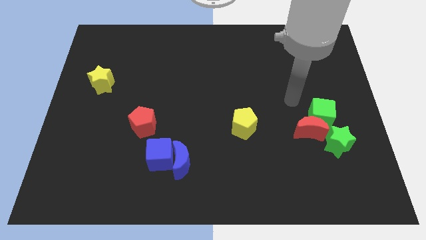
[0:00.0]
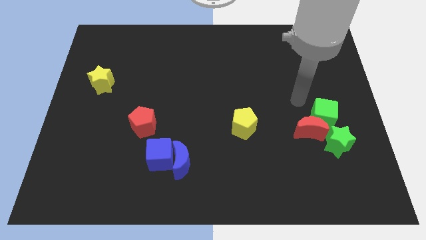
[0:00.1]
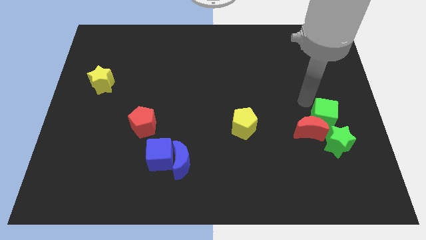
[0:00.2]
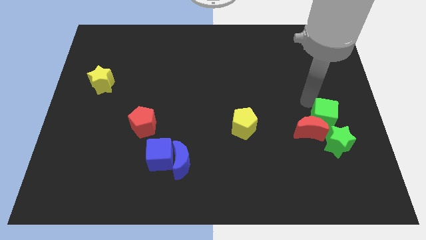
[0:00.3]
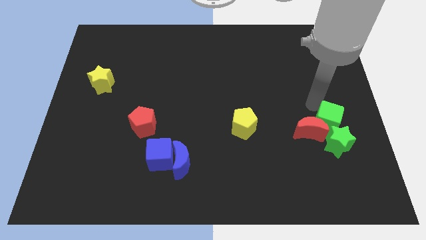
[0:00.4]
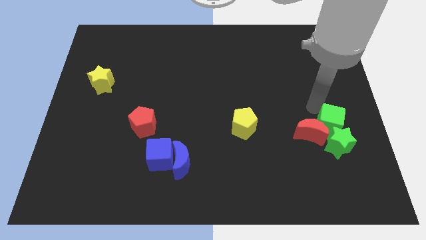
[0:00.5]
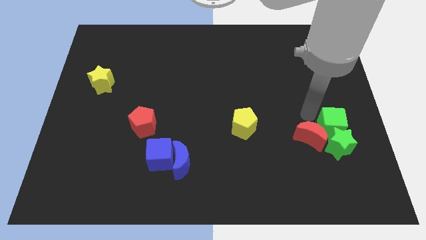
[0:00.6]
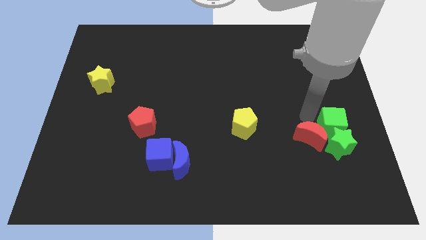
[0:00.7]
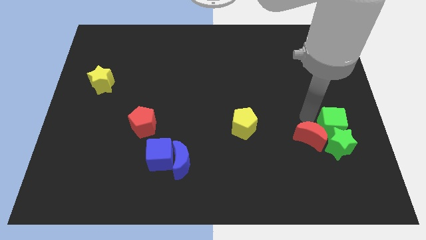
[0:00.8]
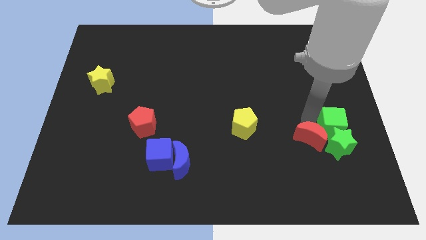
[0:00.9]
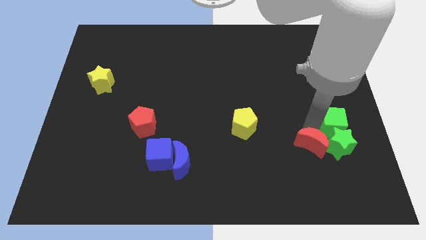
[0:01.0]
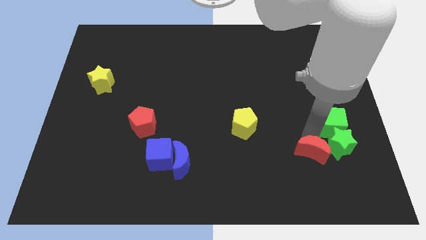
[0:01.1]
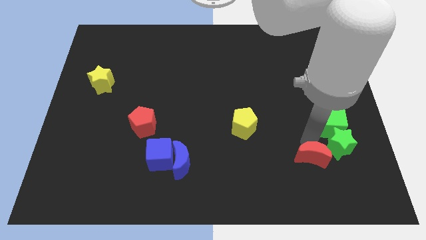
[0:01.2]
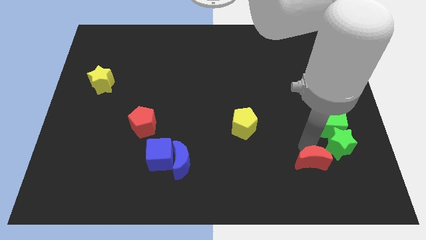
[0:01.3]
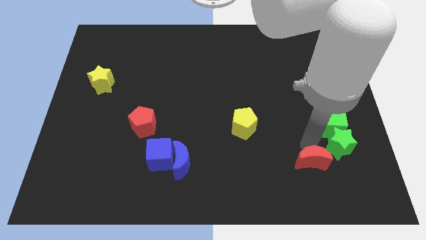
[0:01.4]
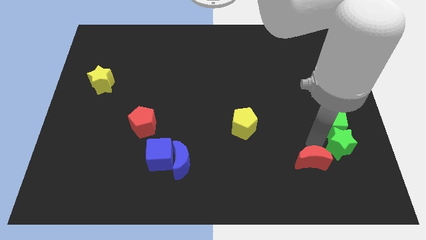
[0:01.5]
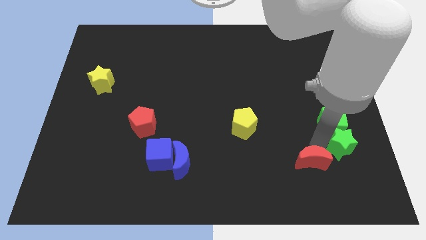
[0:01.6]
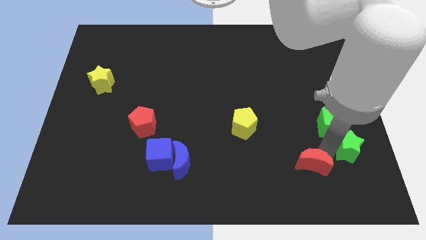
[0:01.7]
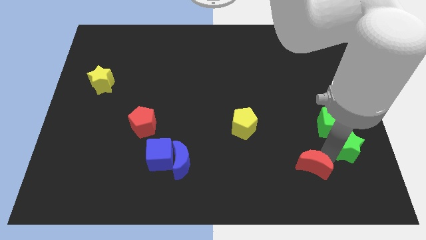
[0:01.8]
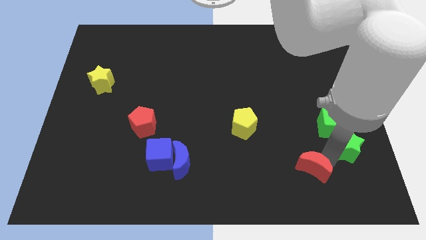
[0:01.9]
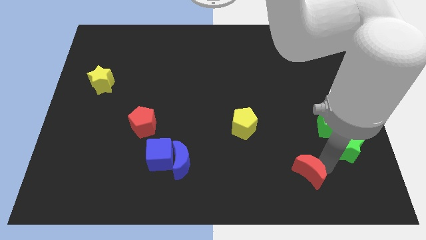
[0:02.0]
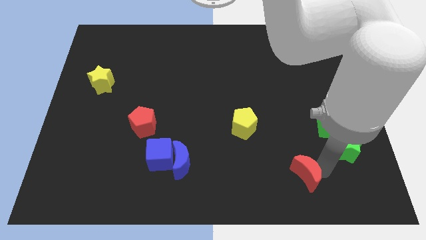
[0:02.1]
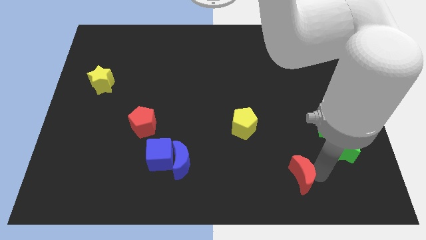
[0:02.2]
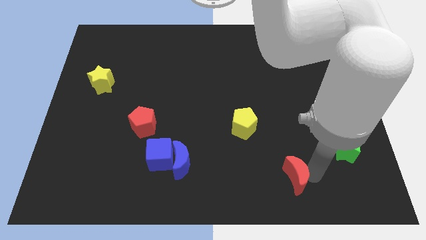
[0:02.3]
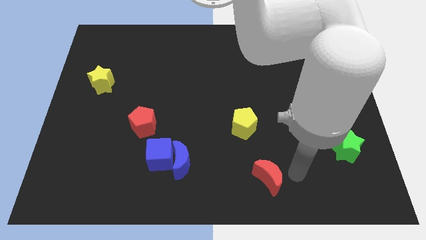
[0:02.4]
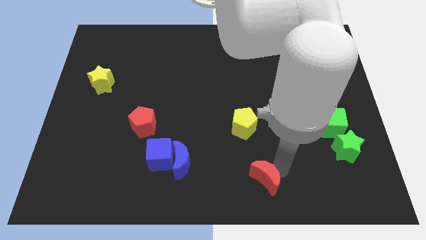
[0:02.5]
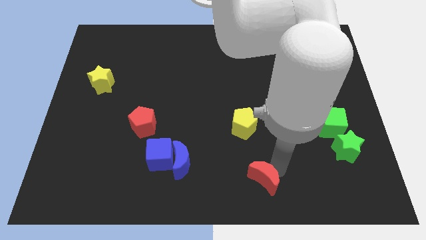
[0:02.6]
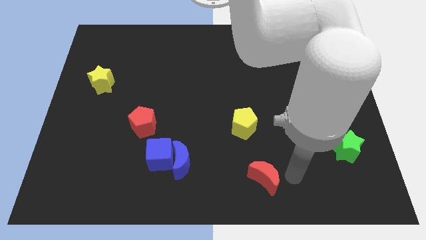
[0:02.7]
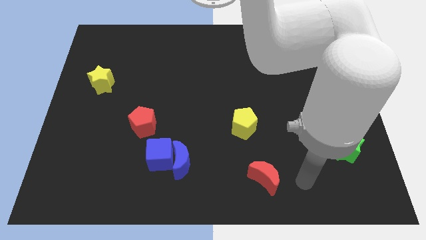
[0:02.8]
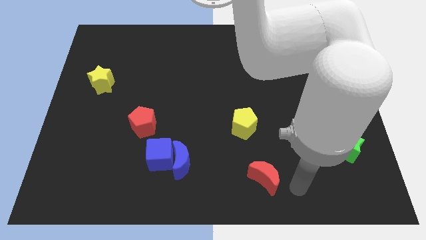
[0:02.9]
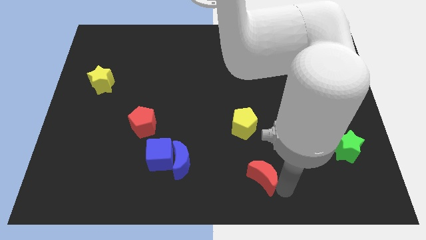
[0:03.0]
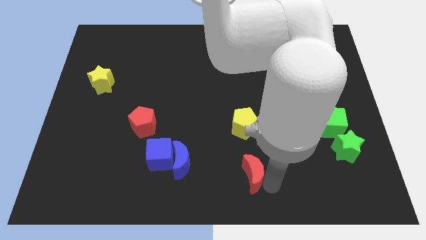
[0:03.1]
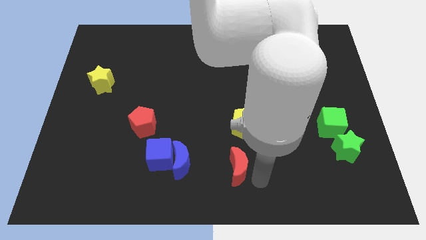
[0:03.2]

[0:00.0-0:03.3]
place the red crescent below the yellow pentagon

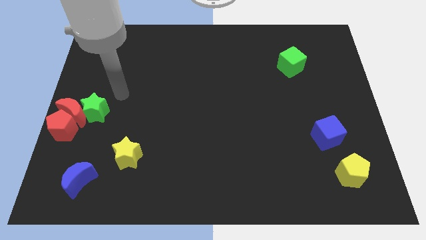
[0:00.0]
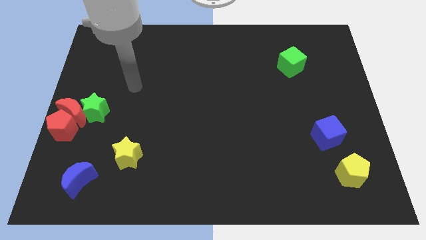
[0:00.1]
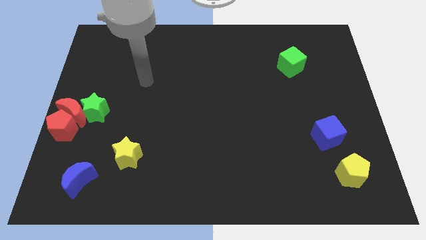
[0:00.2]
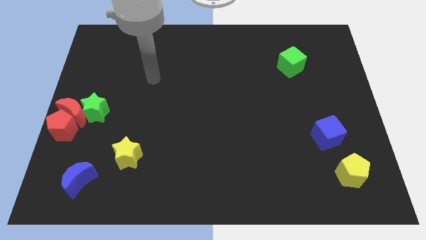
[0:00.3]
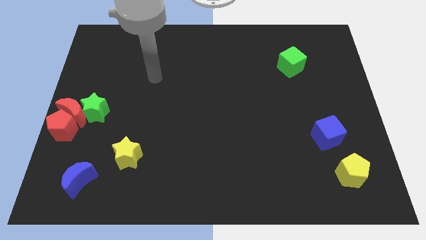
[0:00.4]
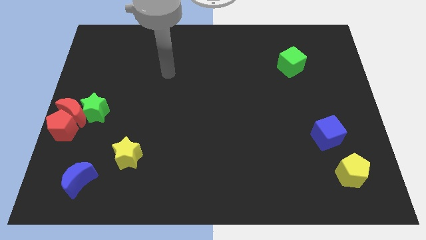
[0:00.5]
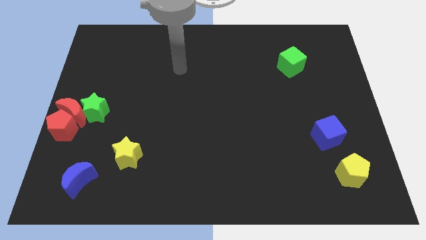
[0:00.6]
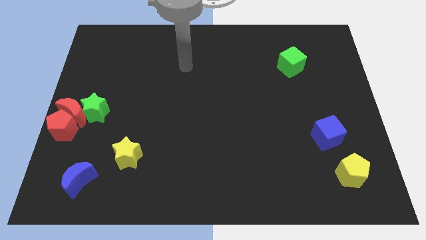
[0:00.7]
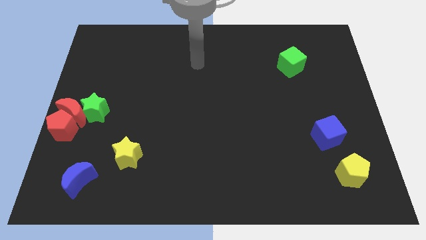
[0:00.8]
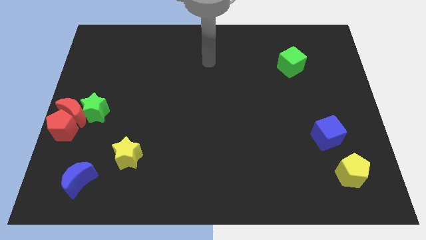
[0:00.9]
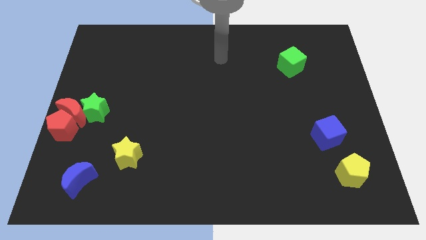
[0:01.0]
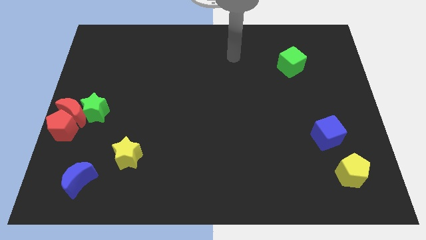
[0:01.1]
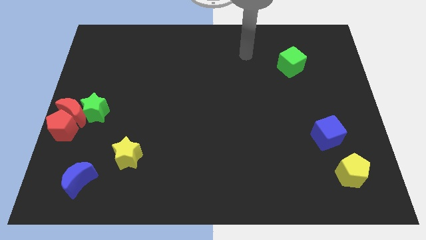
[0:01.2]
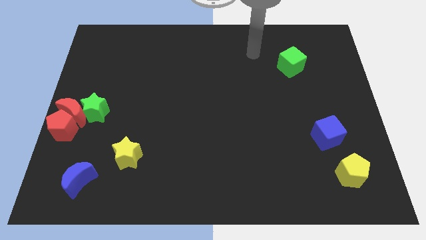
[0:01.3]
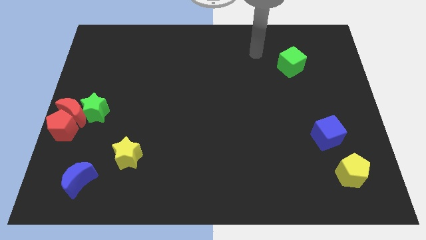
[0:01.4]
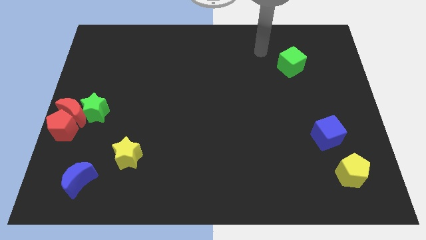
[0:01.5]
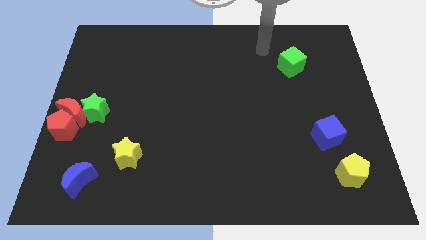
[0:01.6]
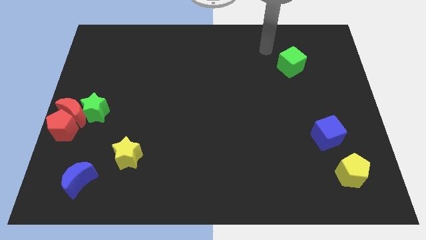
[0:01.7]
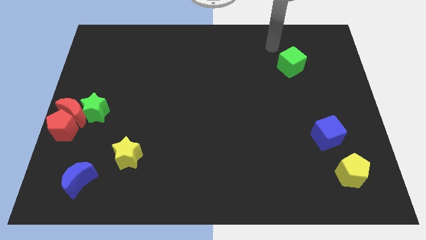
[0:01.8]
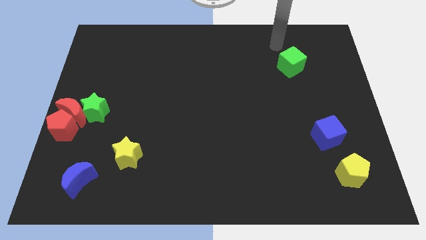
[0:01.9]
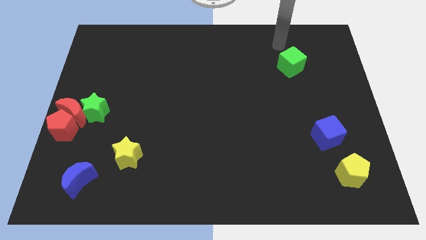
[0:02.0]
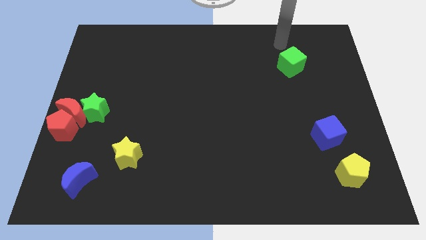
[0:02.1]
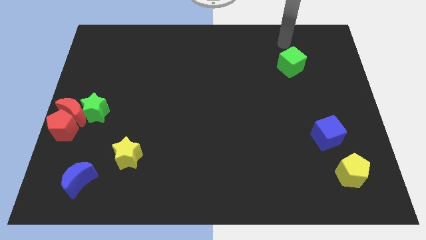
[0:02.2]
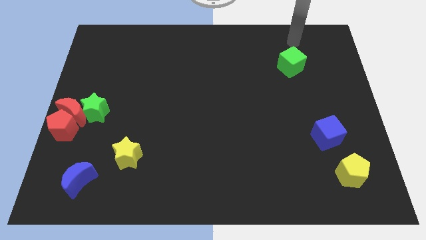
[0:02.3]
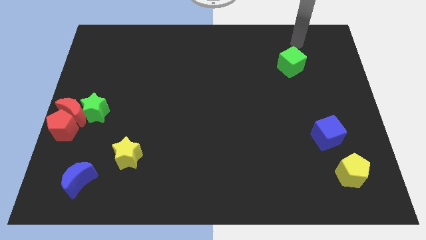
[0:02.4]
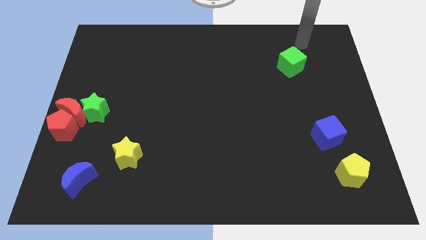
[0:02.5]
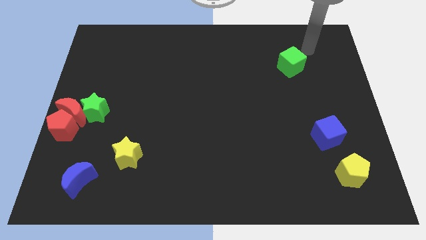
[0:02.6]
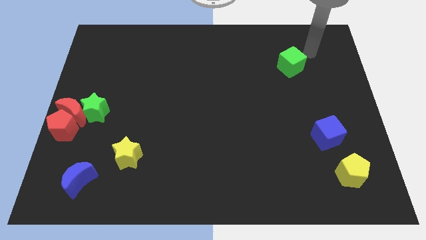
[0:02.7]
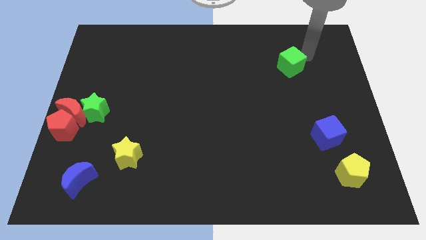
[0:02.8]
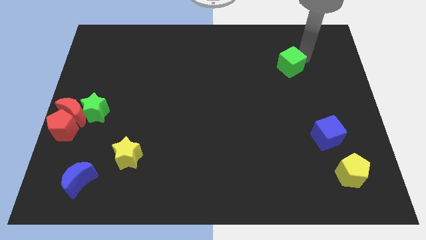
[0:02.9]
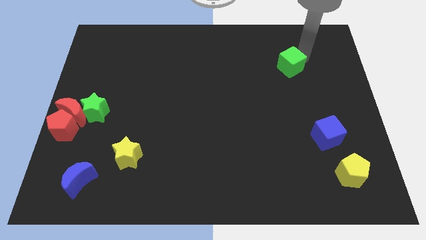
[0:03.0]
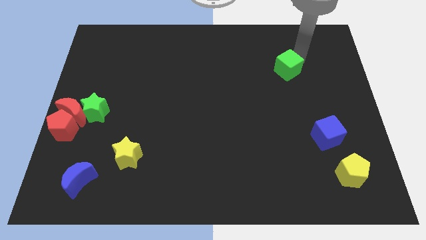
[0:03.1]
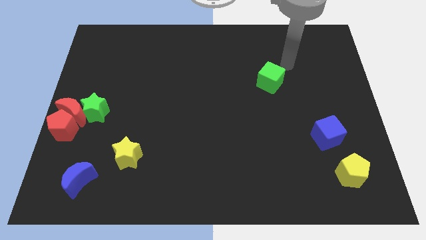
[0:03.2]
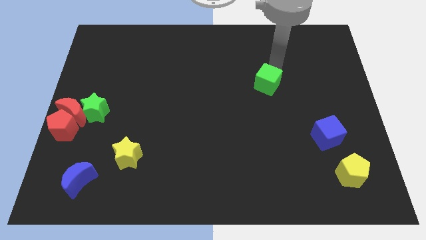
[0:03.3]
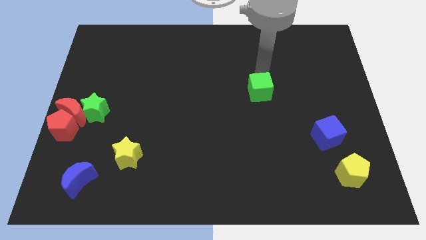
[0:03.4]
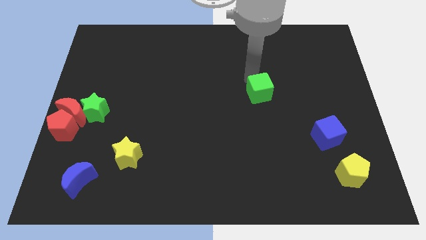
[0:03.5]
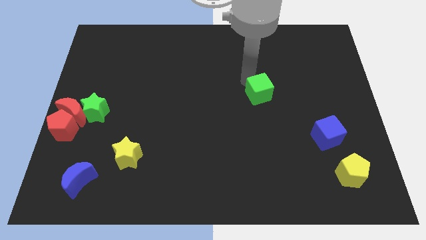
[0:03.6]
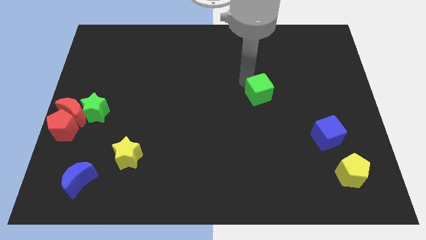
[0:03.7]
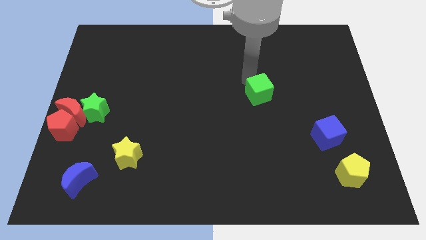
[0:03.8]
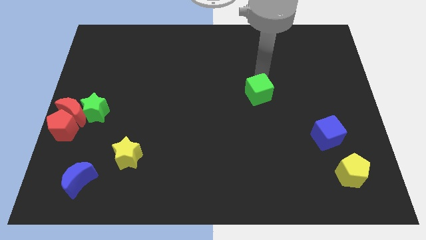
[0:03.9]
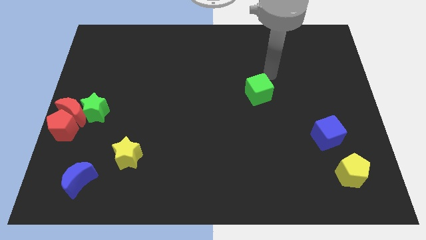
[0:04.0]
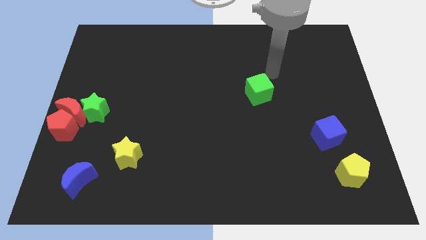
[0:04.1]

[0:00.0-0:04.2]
slide the green cube towards the center

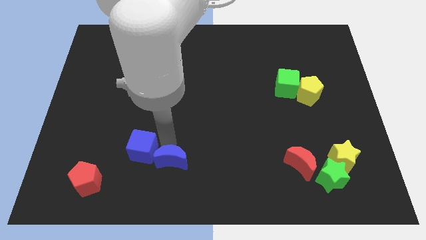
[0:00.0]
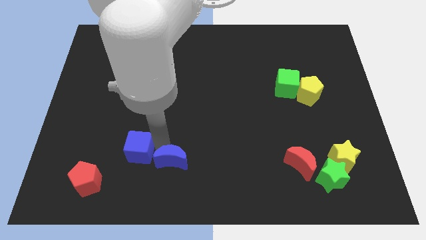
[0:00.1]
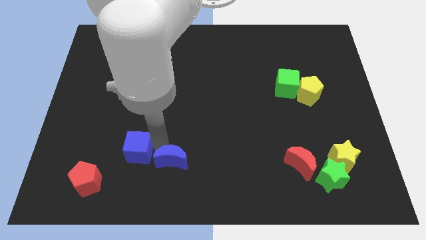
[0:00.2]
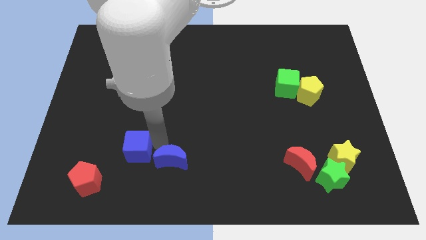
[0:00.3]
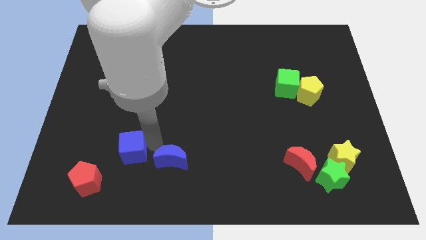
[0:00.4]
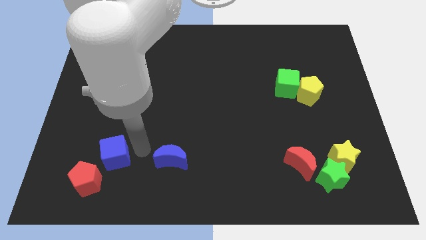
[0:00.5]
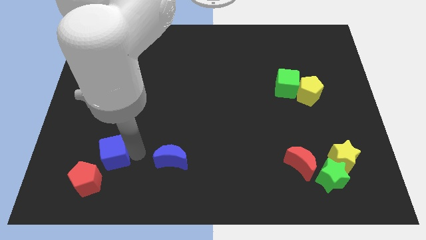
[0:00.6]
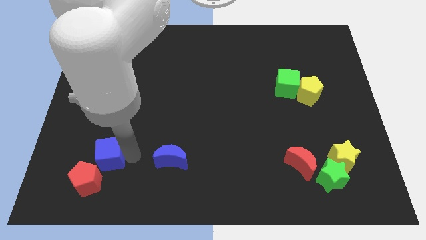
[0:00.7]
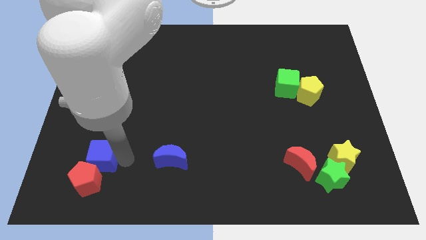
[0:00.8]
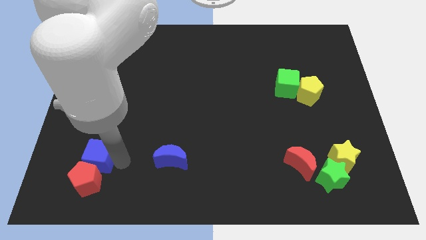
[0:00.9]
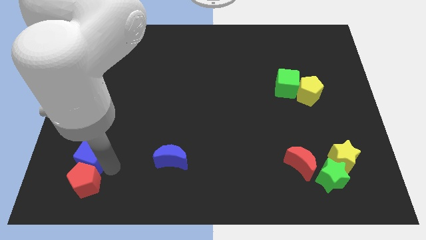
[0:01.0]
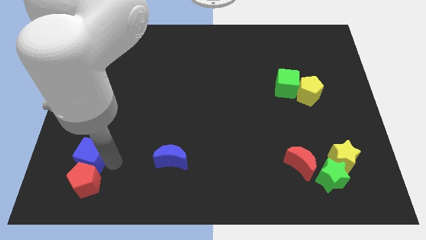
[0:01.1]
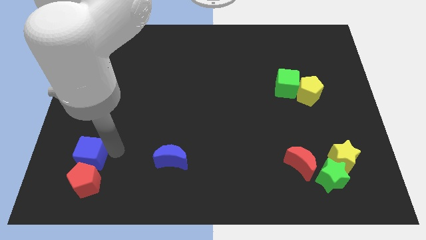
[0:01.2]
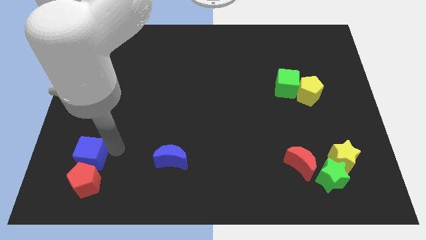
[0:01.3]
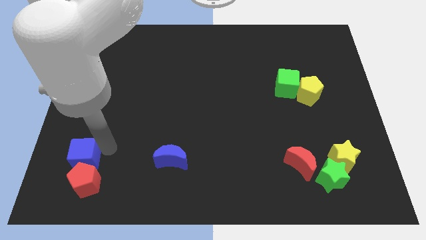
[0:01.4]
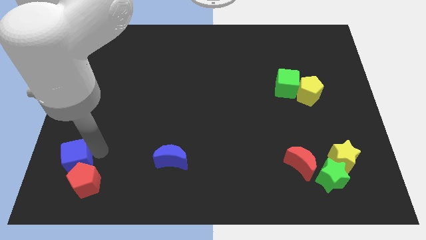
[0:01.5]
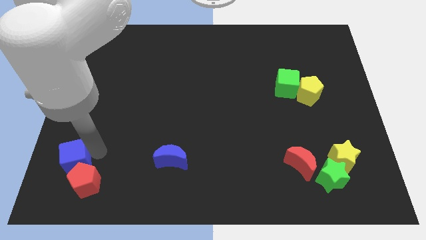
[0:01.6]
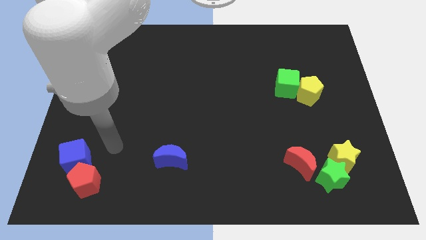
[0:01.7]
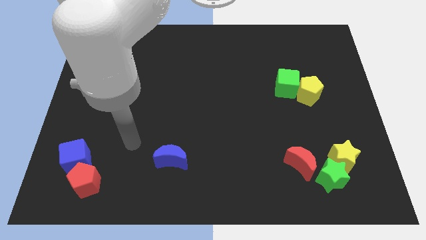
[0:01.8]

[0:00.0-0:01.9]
separate the blue cube from the blue moon
